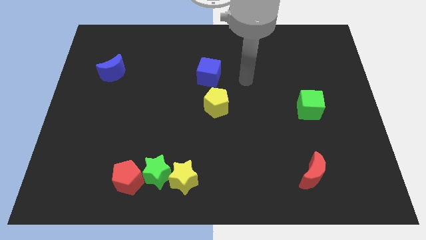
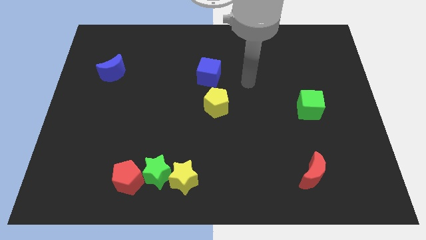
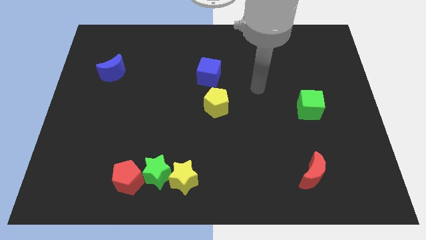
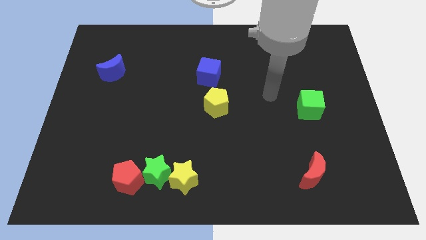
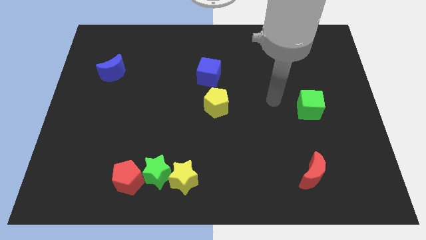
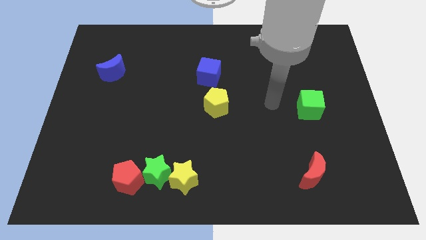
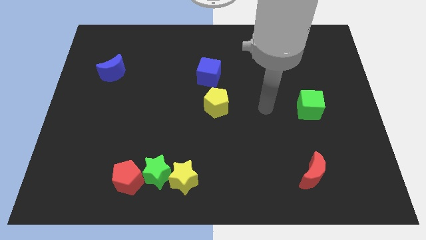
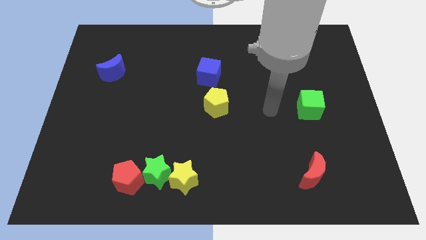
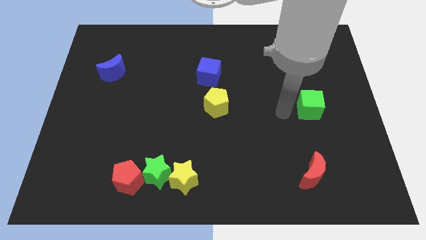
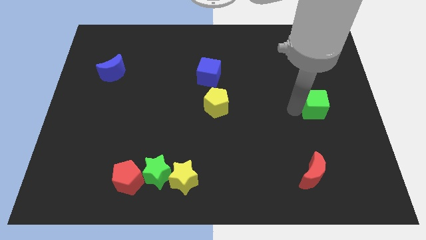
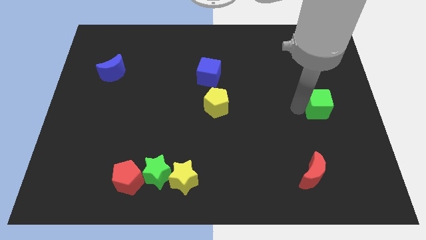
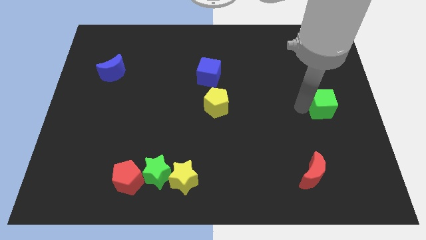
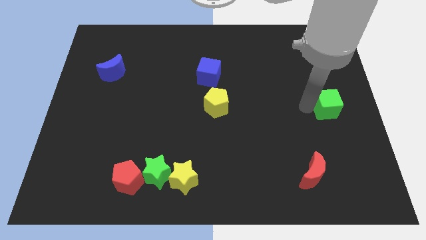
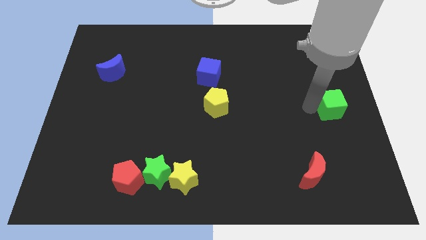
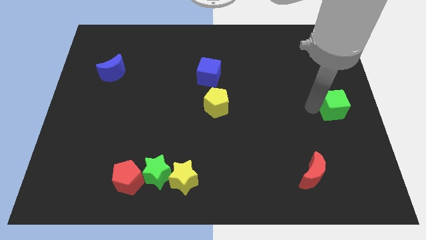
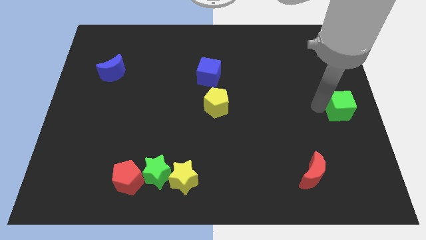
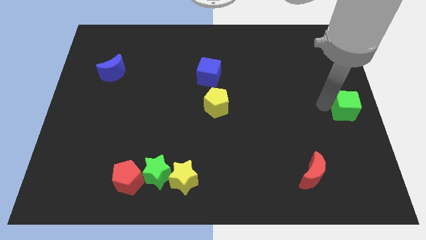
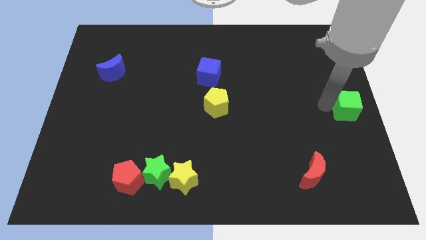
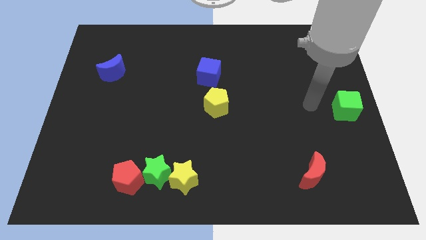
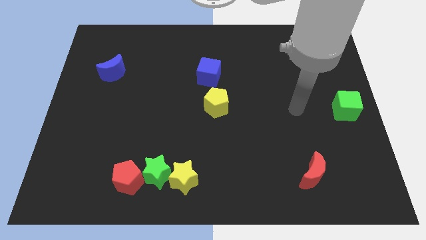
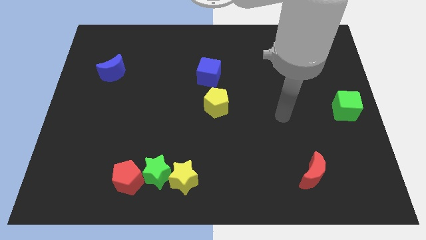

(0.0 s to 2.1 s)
push the green cube to center right

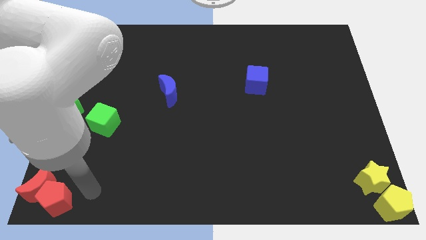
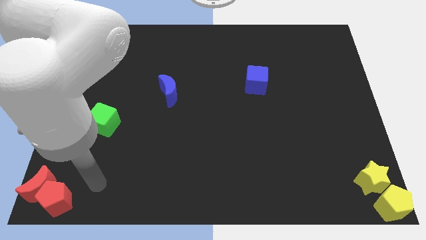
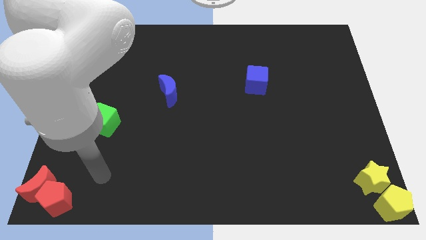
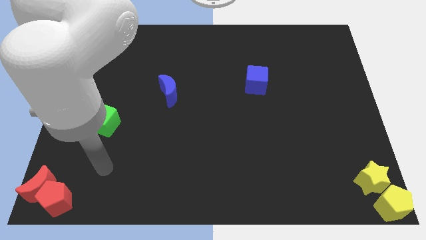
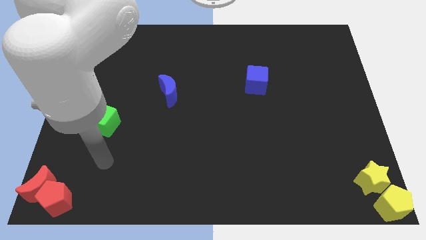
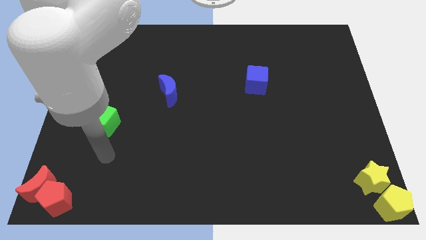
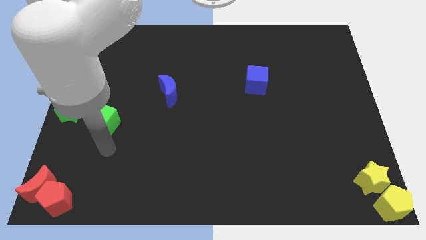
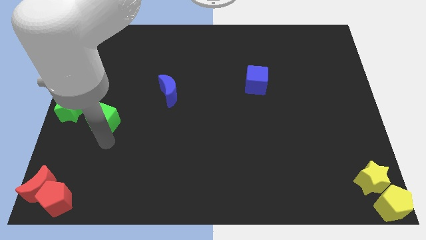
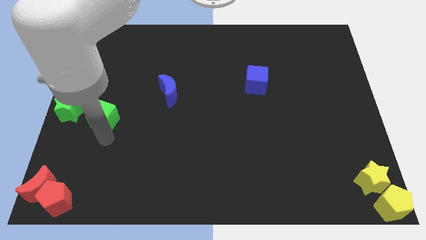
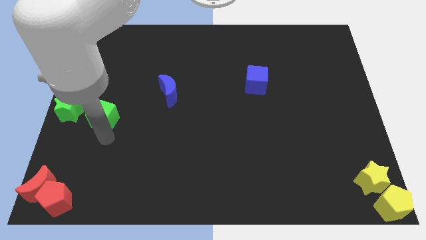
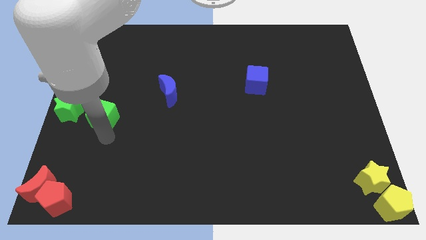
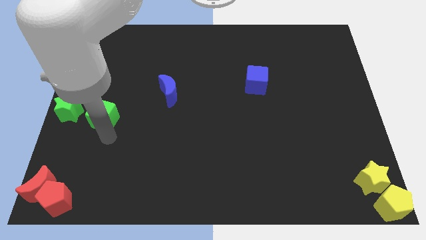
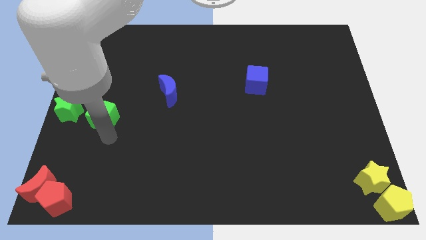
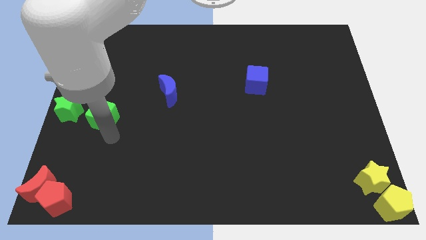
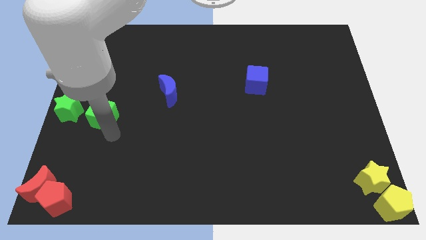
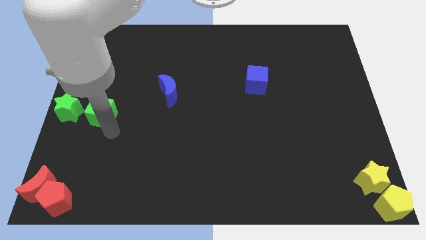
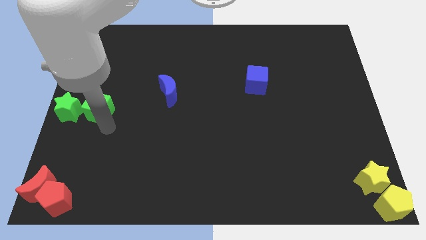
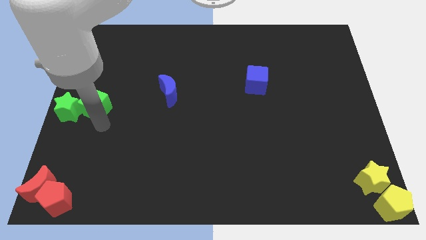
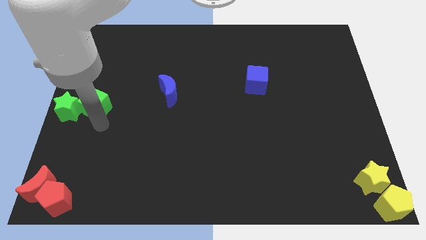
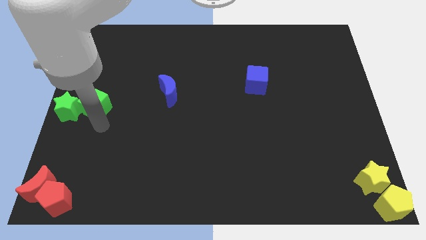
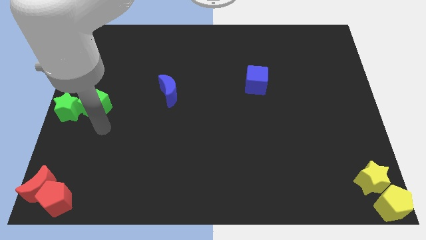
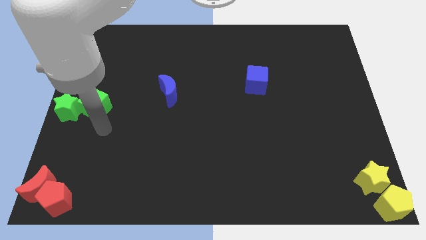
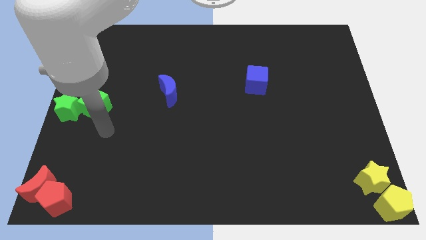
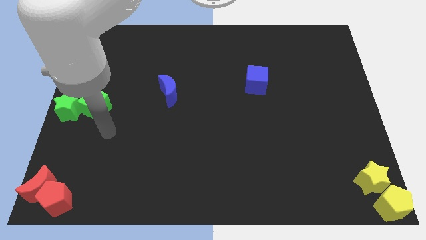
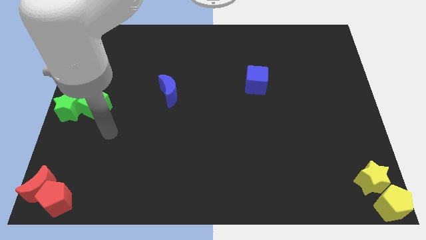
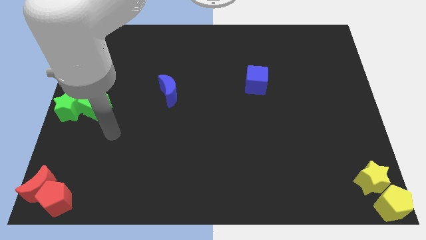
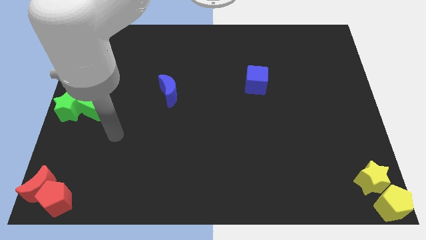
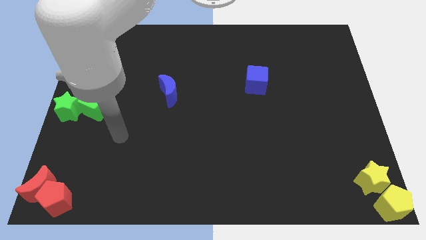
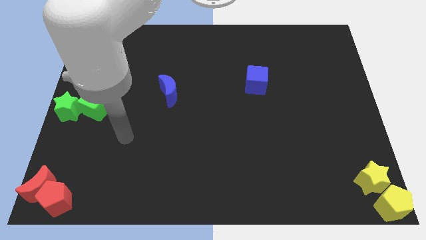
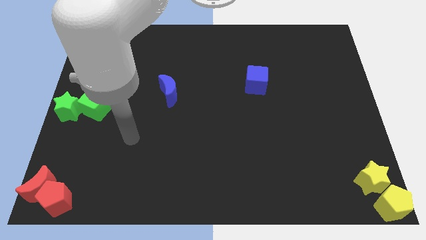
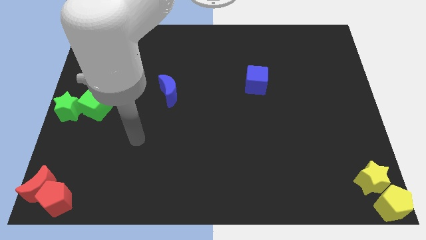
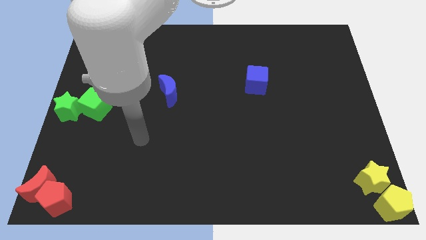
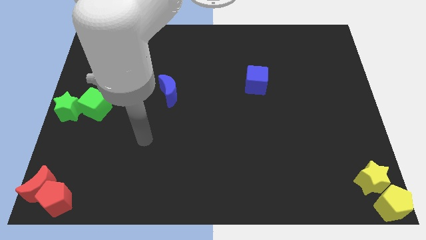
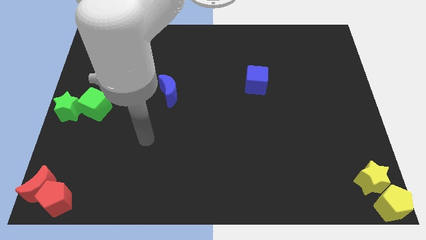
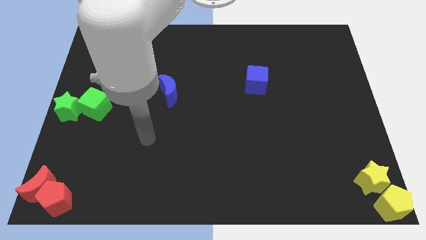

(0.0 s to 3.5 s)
move the green cube to the right side of the green star

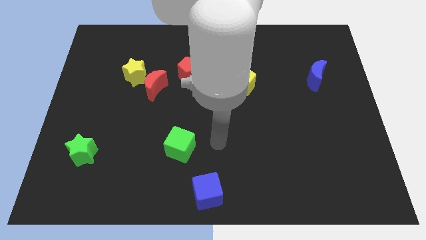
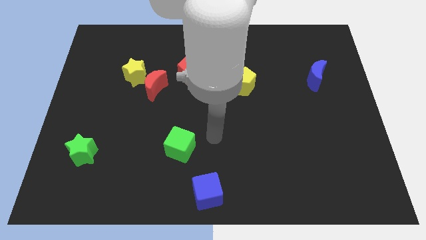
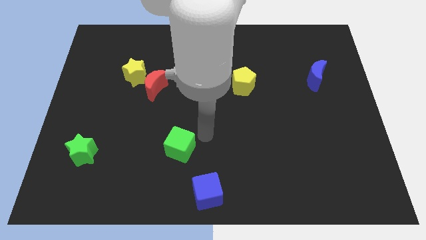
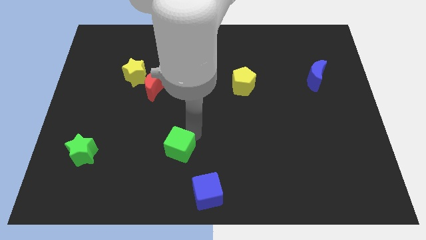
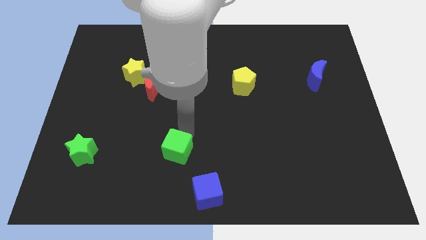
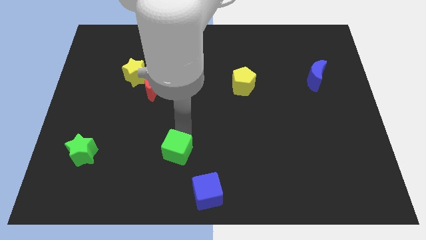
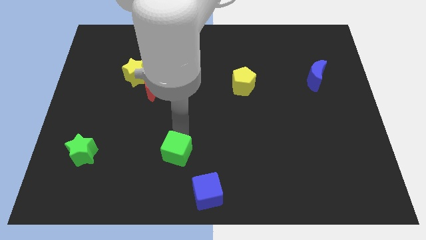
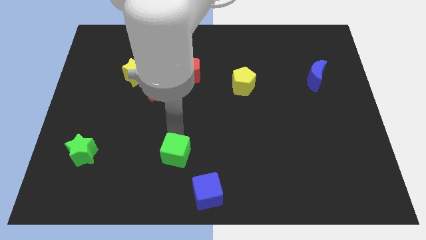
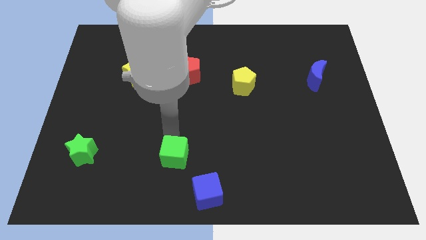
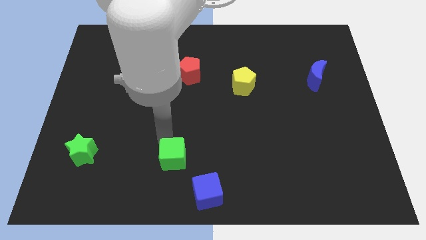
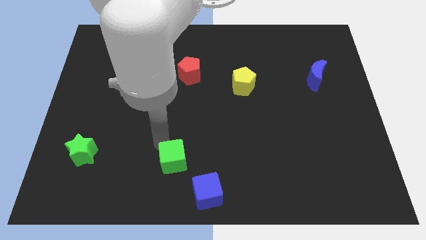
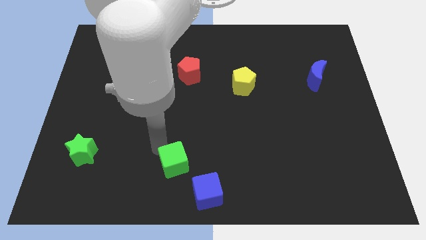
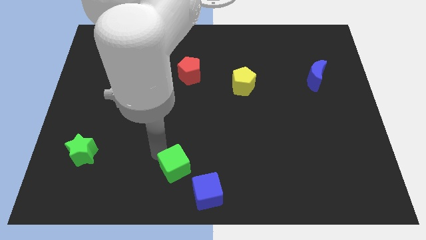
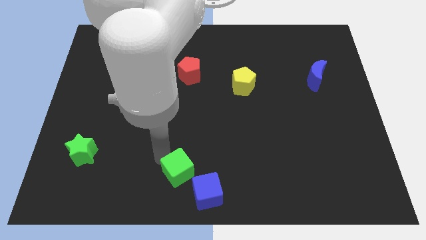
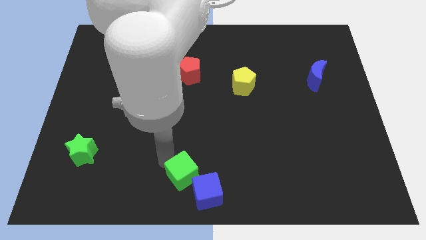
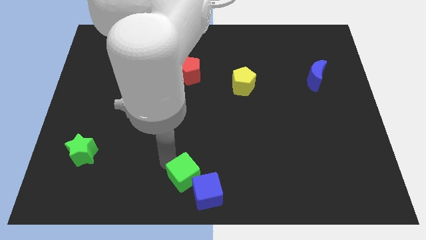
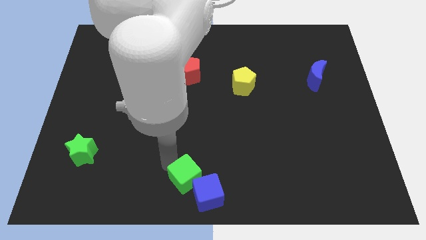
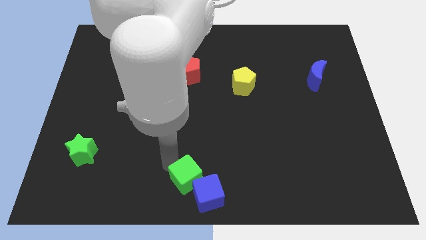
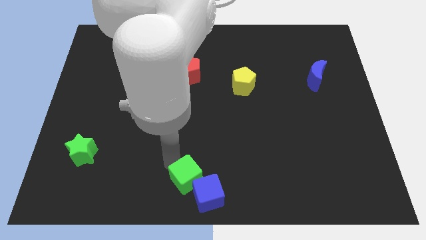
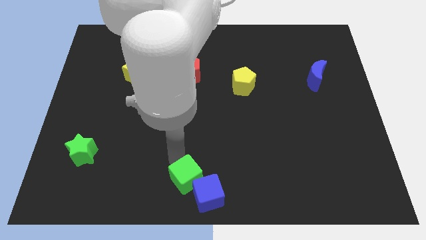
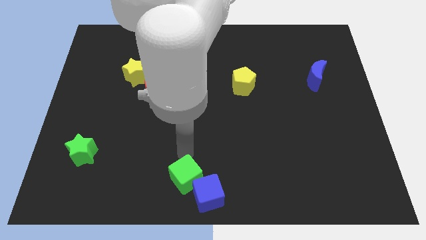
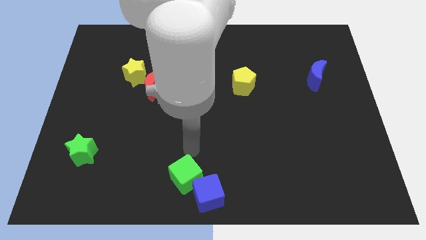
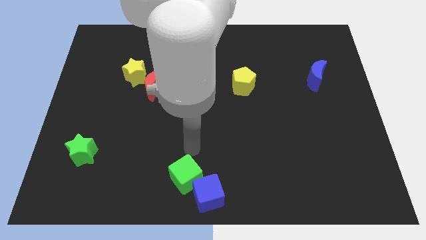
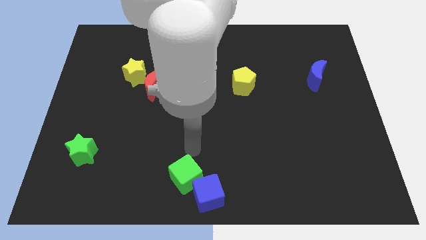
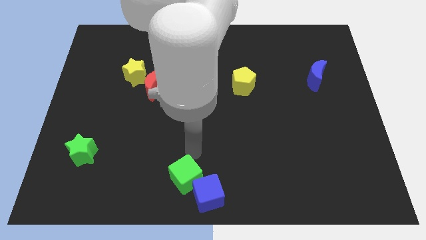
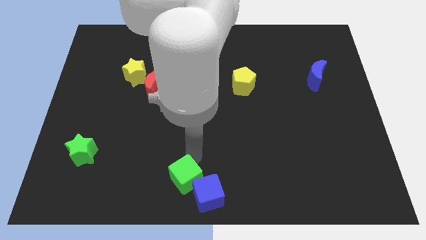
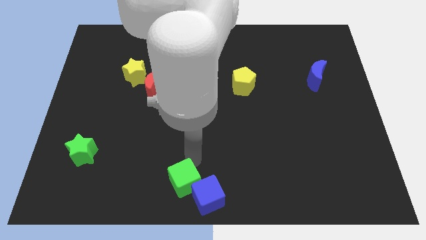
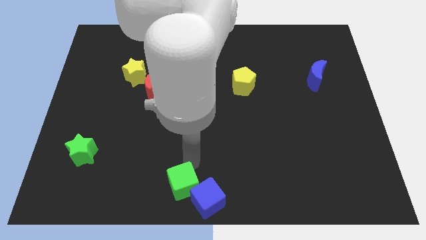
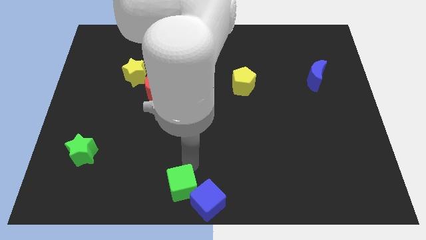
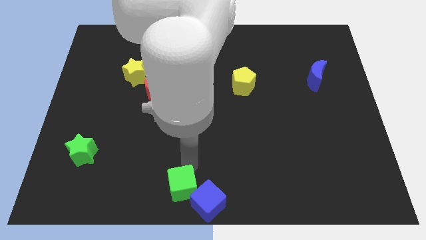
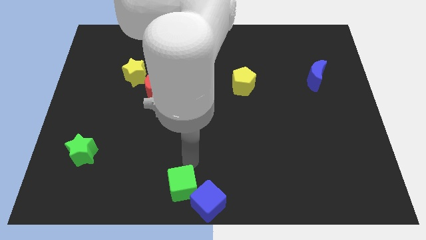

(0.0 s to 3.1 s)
push the green star to the top left of the blue cube

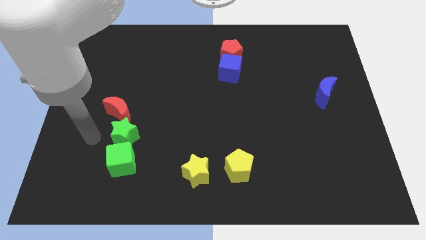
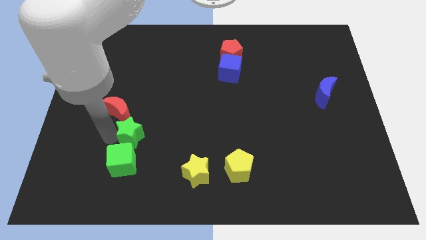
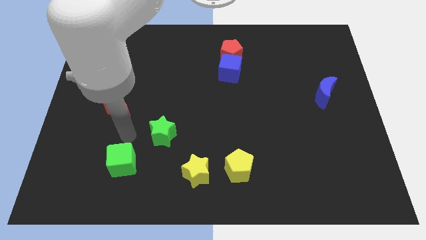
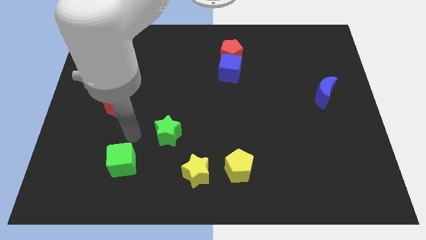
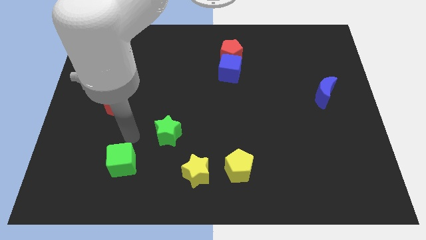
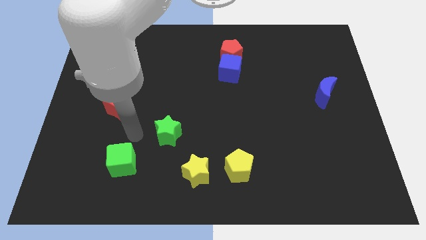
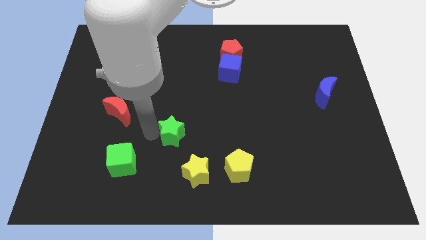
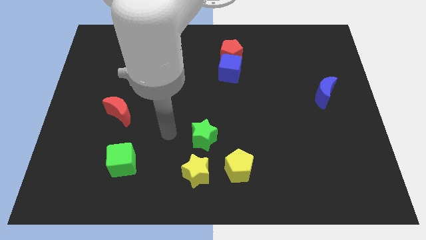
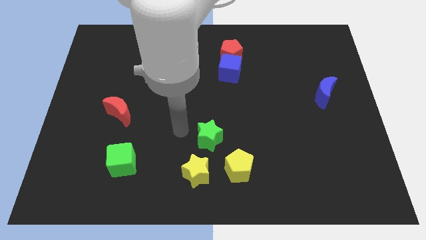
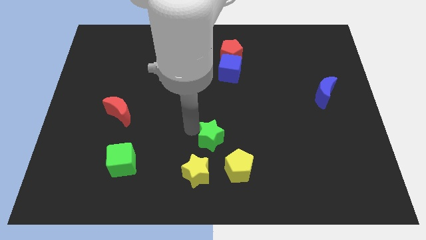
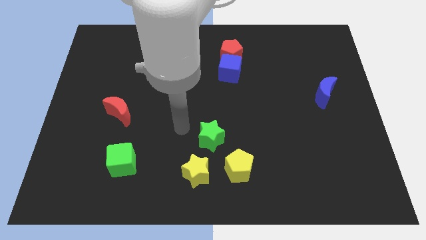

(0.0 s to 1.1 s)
place the green star above the the yellow star
